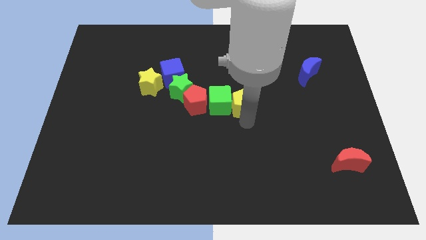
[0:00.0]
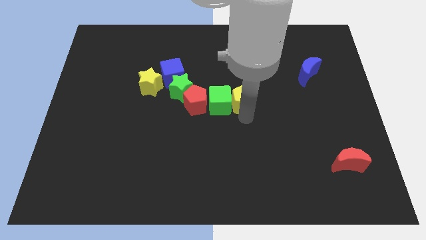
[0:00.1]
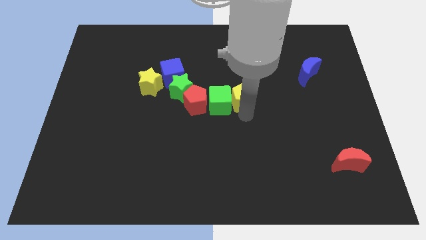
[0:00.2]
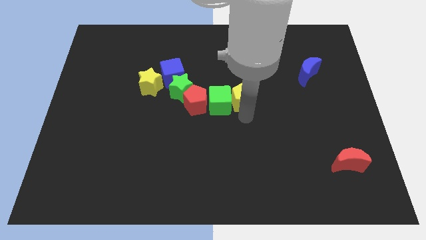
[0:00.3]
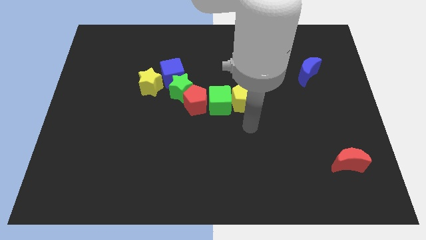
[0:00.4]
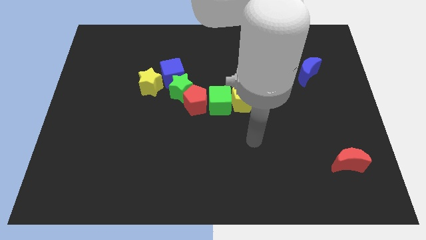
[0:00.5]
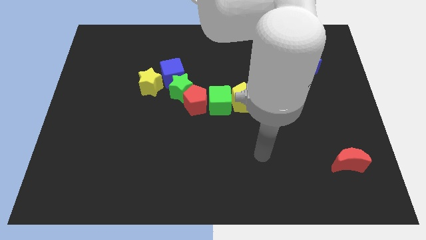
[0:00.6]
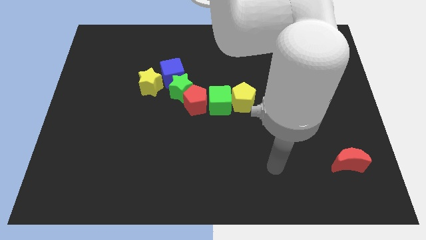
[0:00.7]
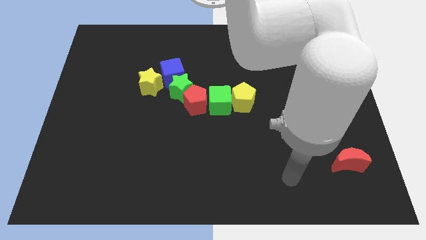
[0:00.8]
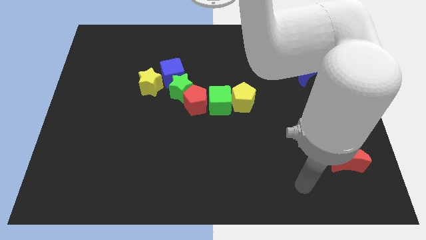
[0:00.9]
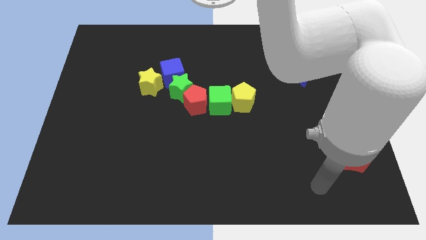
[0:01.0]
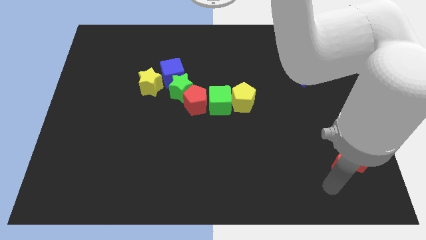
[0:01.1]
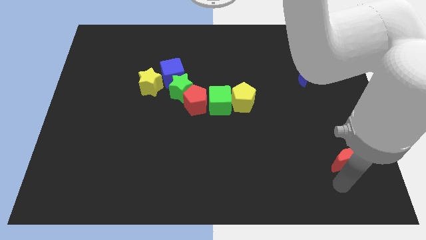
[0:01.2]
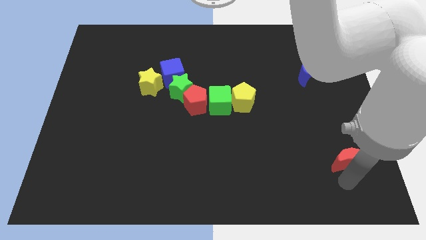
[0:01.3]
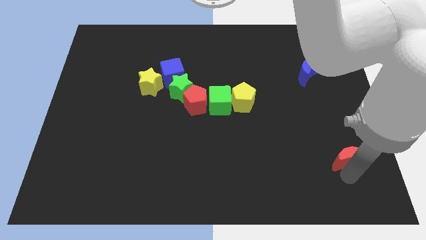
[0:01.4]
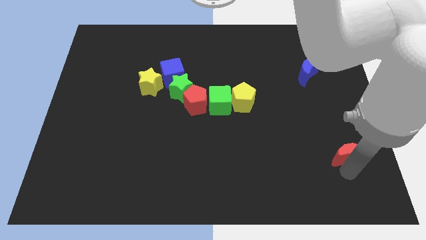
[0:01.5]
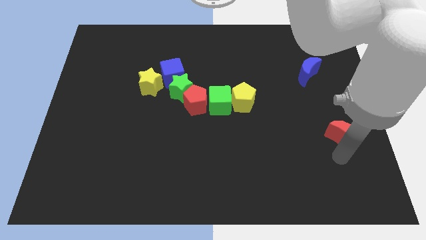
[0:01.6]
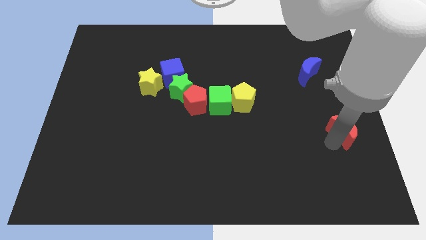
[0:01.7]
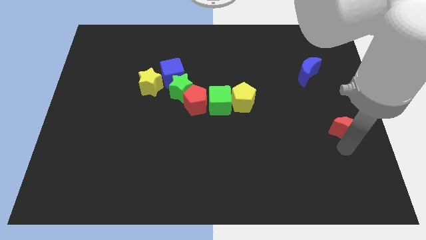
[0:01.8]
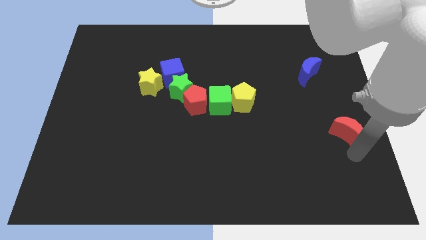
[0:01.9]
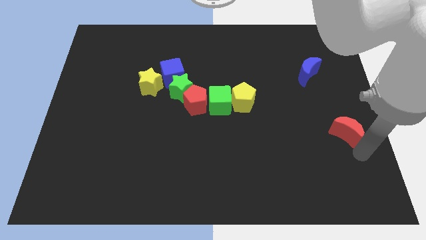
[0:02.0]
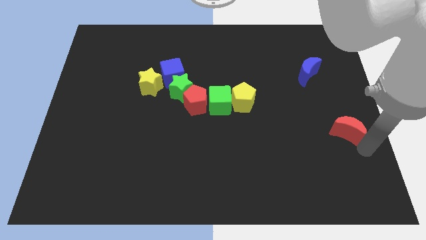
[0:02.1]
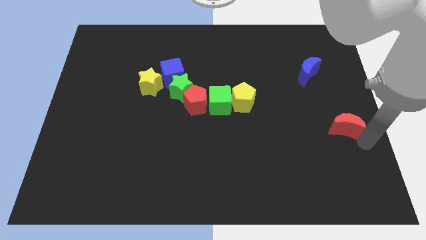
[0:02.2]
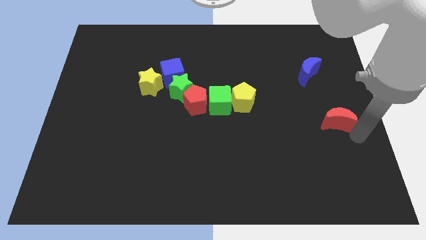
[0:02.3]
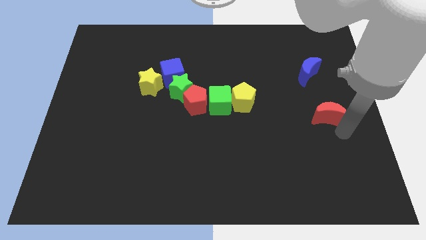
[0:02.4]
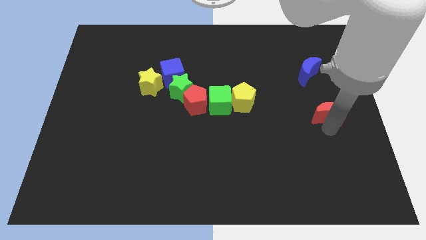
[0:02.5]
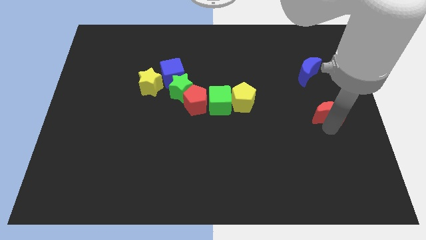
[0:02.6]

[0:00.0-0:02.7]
move the red crescent to the bottom of the blue crescent

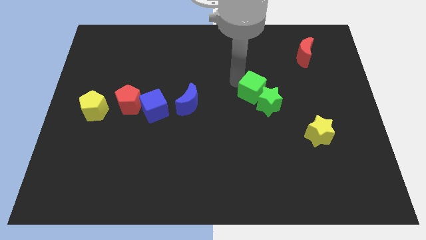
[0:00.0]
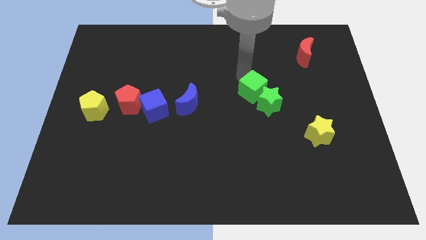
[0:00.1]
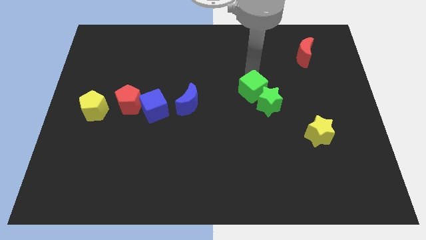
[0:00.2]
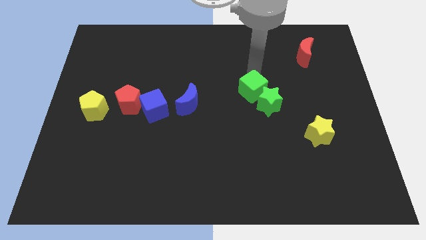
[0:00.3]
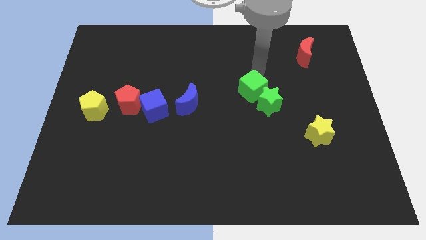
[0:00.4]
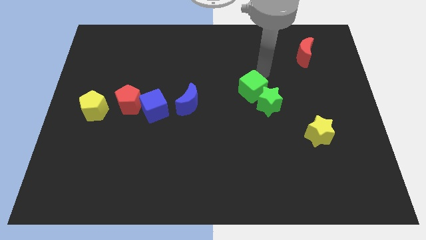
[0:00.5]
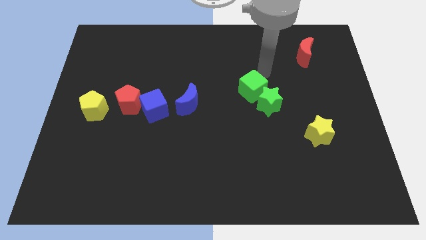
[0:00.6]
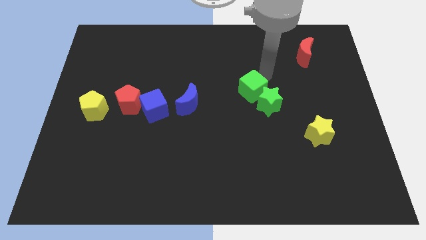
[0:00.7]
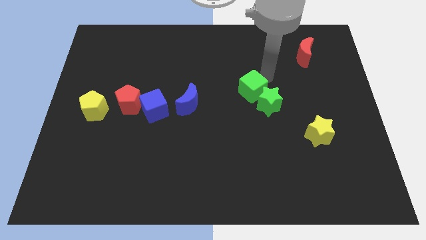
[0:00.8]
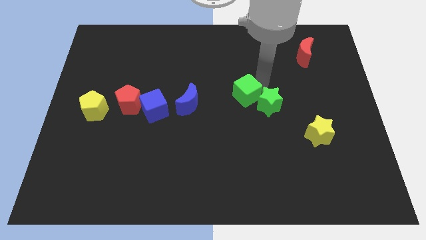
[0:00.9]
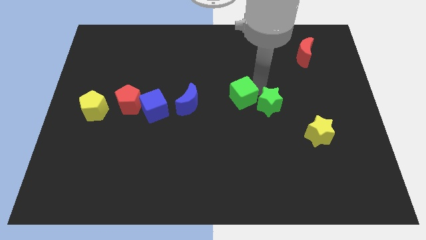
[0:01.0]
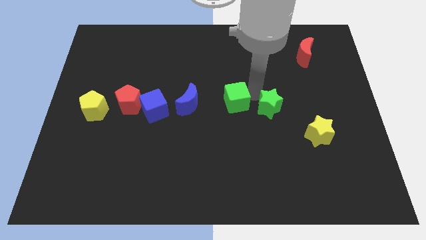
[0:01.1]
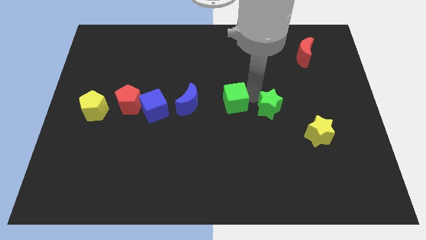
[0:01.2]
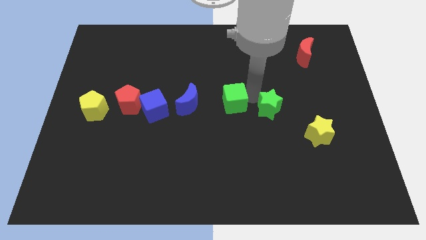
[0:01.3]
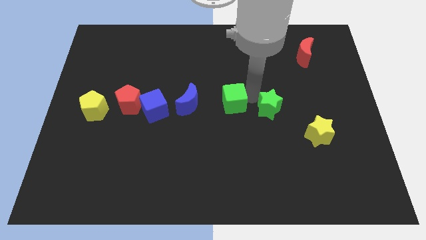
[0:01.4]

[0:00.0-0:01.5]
separate the green cube and green star

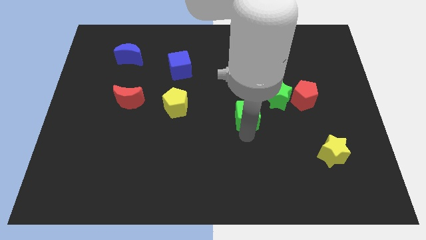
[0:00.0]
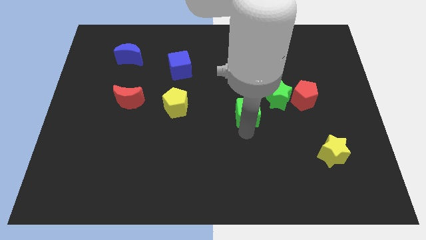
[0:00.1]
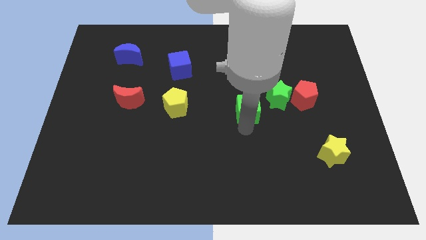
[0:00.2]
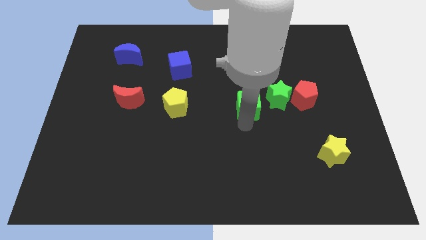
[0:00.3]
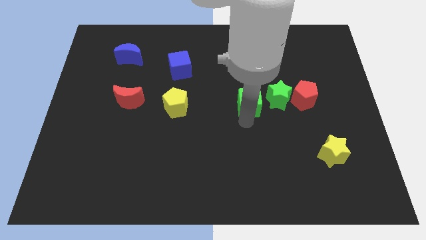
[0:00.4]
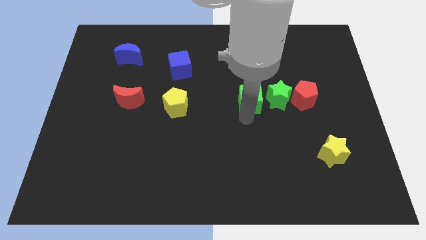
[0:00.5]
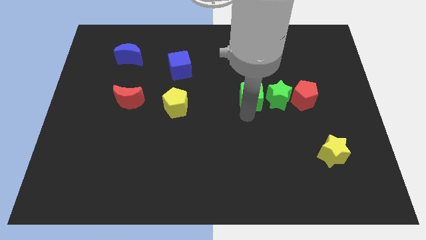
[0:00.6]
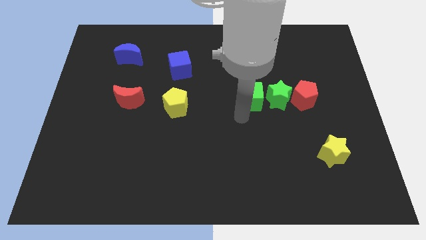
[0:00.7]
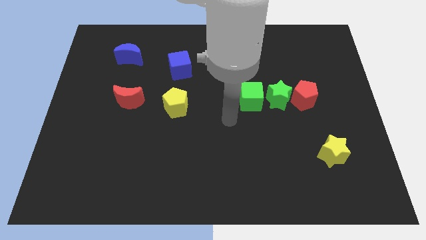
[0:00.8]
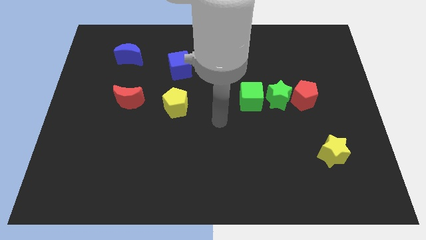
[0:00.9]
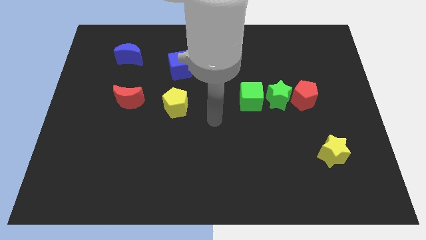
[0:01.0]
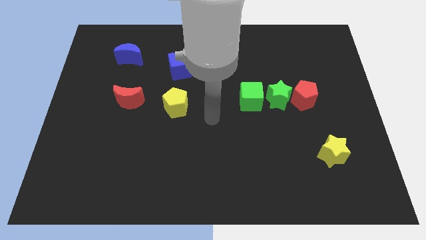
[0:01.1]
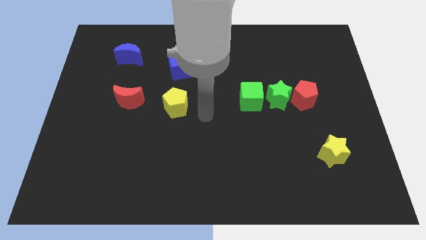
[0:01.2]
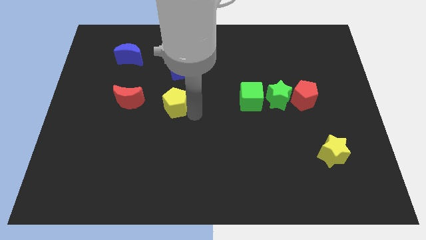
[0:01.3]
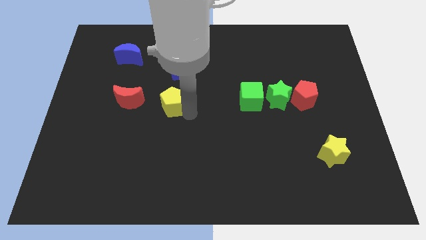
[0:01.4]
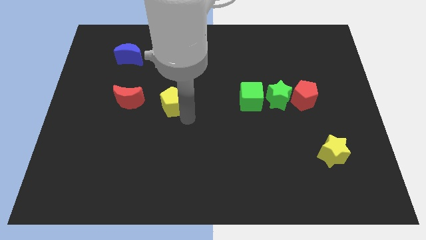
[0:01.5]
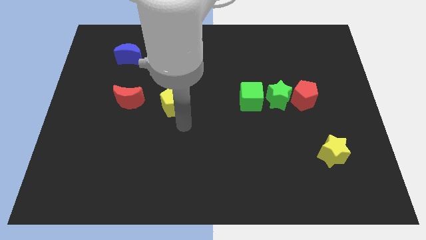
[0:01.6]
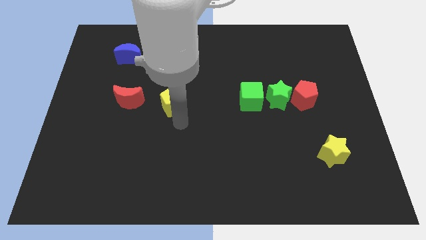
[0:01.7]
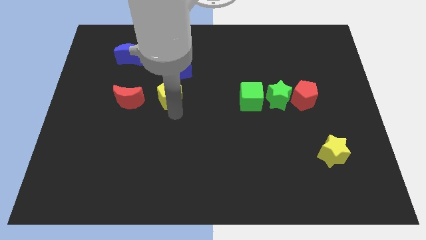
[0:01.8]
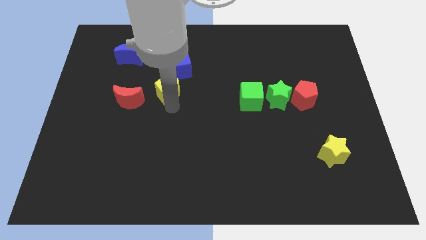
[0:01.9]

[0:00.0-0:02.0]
place the green cube left side of the green star

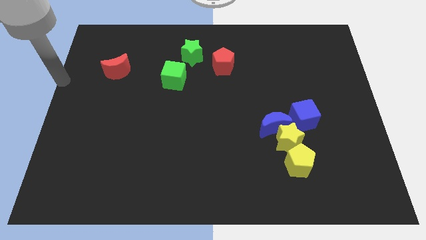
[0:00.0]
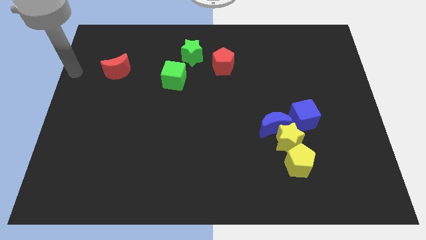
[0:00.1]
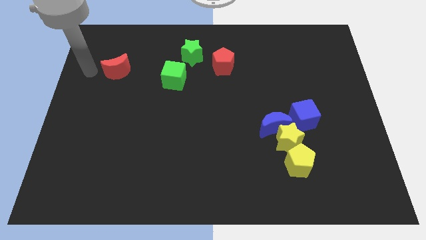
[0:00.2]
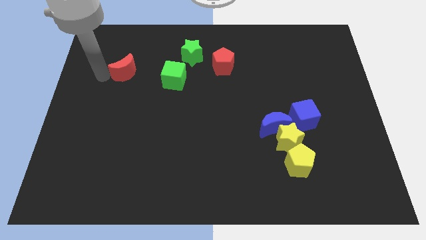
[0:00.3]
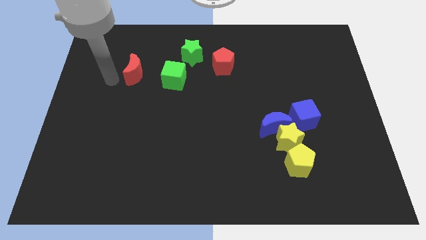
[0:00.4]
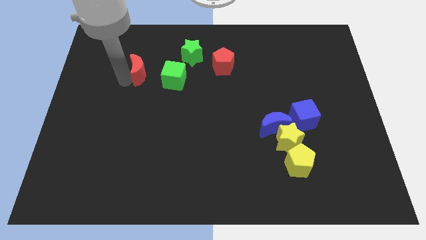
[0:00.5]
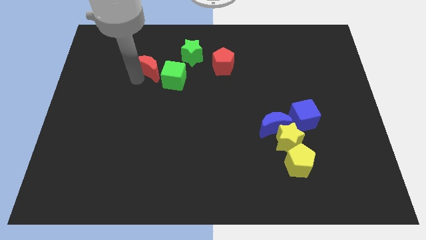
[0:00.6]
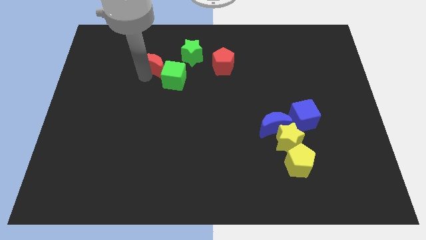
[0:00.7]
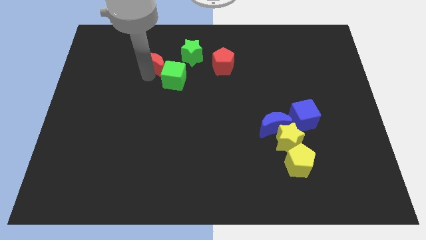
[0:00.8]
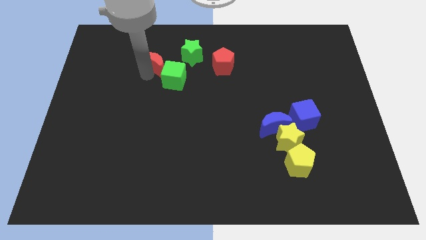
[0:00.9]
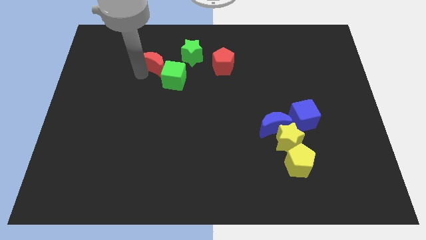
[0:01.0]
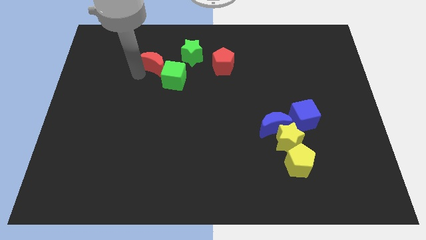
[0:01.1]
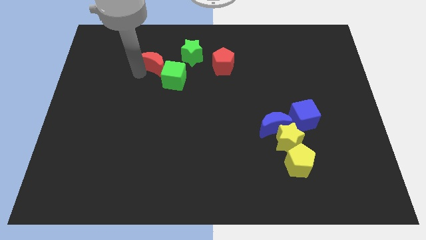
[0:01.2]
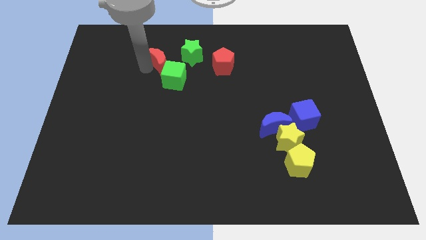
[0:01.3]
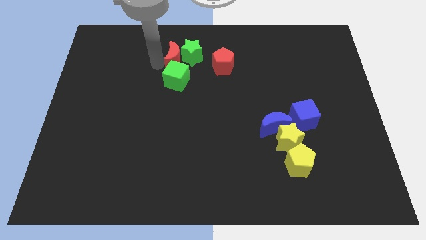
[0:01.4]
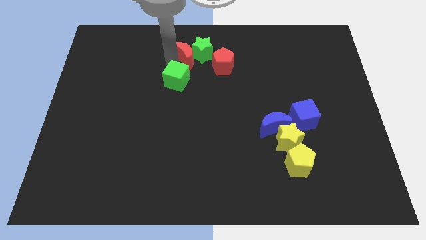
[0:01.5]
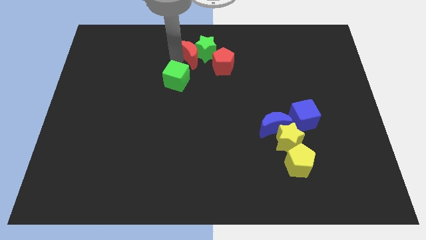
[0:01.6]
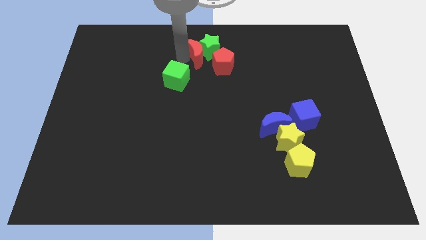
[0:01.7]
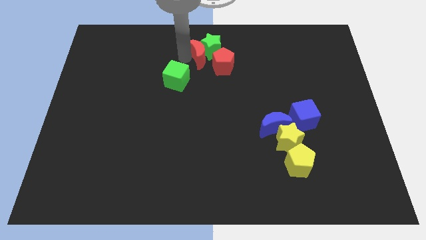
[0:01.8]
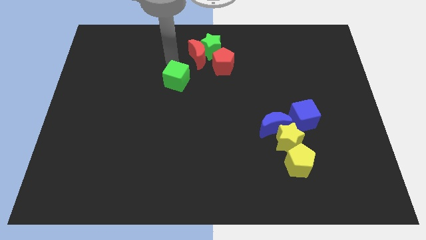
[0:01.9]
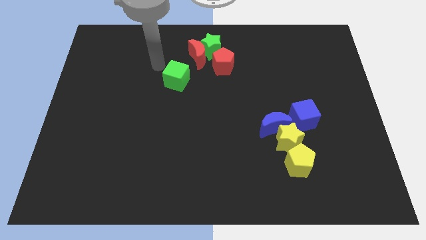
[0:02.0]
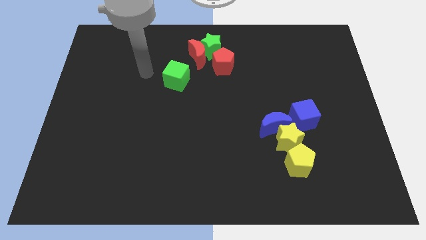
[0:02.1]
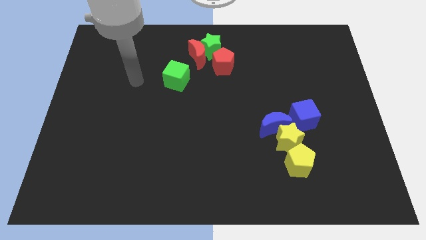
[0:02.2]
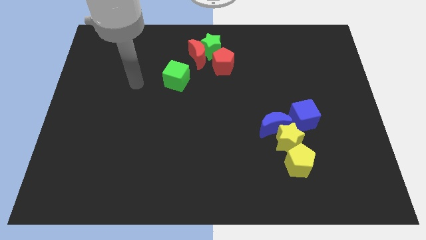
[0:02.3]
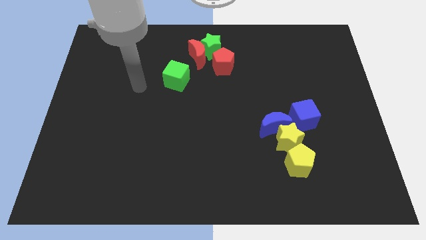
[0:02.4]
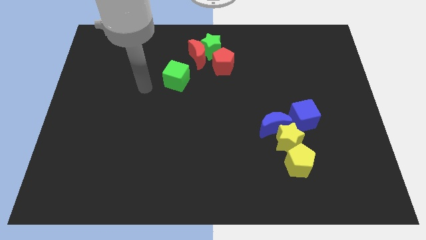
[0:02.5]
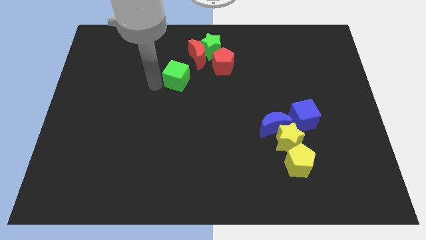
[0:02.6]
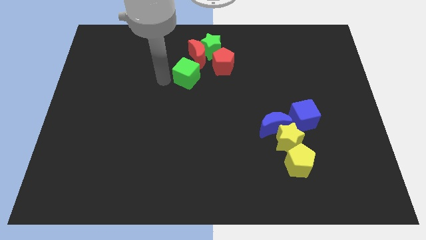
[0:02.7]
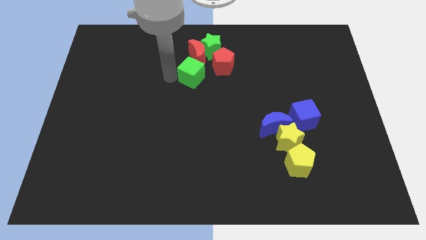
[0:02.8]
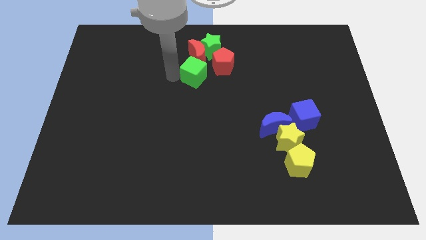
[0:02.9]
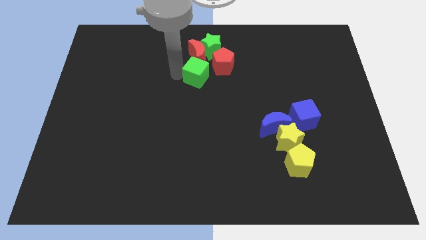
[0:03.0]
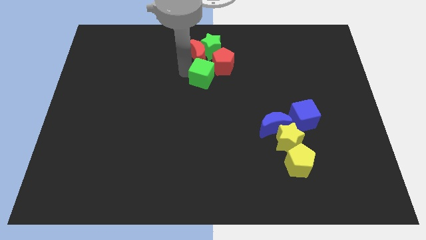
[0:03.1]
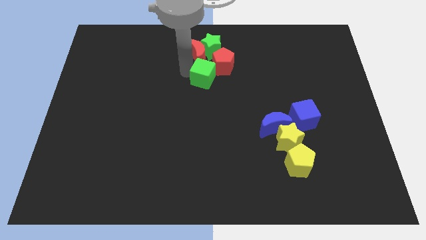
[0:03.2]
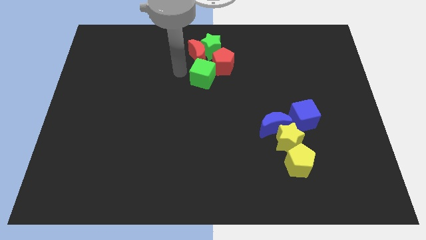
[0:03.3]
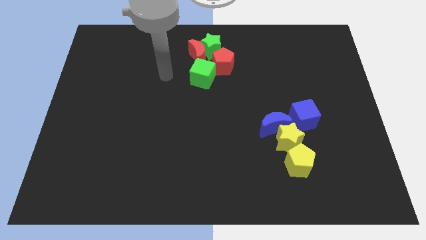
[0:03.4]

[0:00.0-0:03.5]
push all the green and red blocks to the top center of the board
